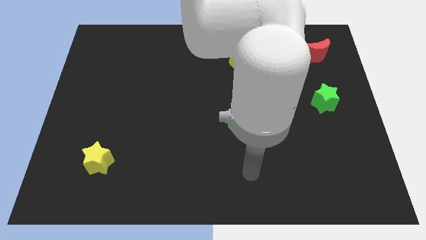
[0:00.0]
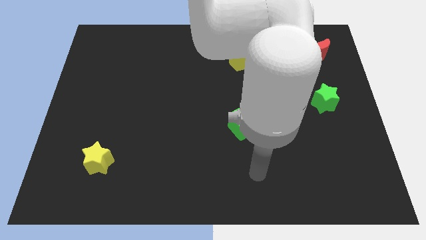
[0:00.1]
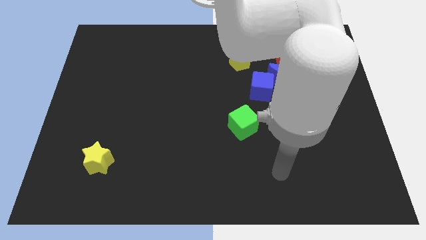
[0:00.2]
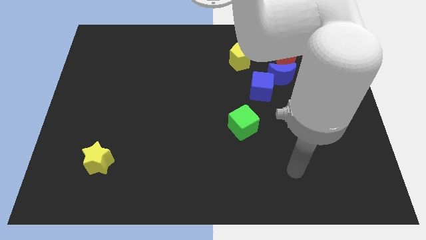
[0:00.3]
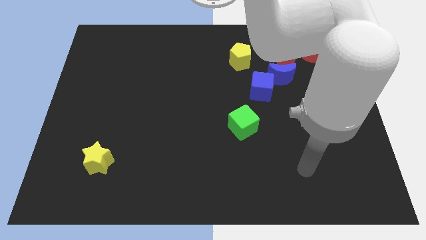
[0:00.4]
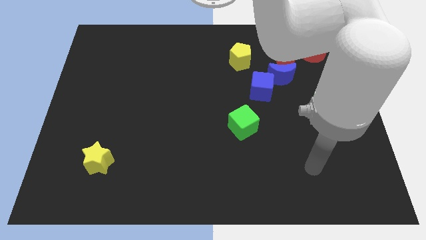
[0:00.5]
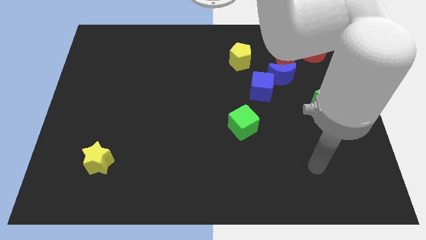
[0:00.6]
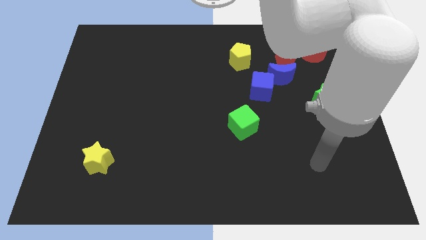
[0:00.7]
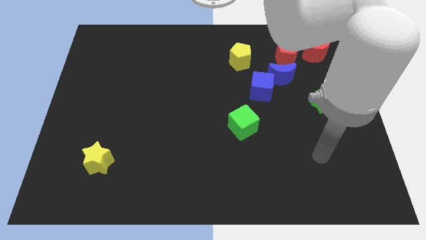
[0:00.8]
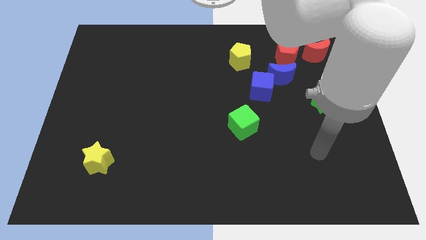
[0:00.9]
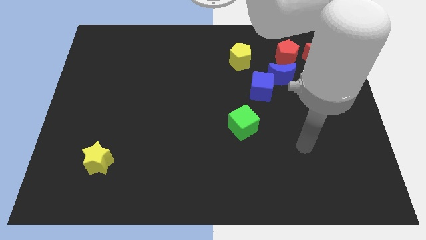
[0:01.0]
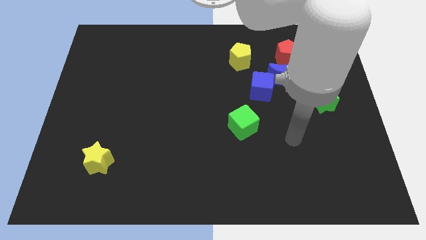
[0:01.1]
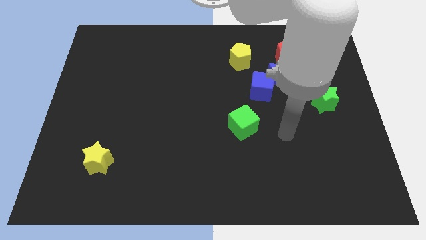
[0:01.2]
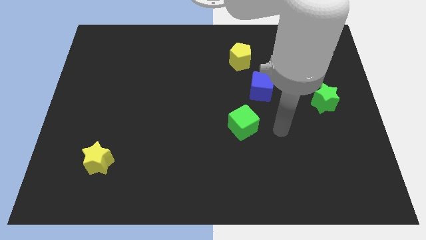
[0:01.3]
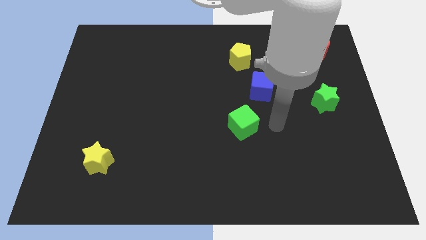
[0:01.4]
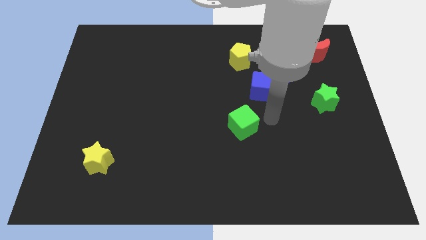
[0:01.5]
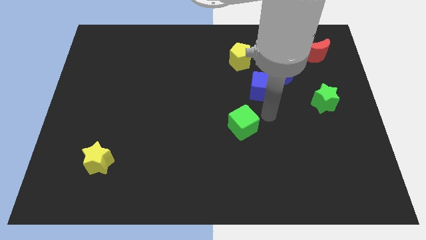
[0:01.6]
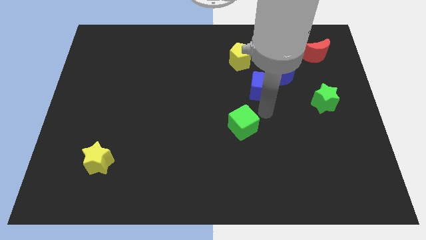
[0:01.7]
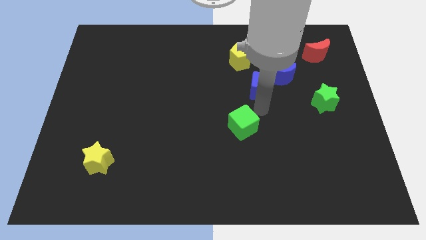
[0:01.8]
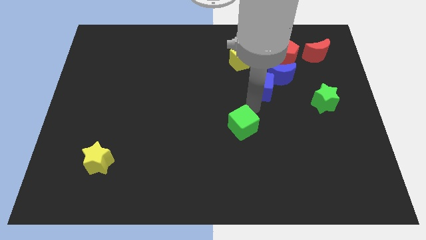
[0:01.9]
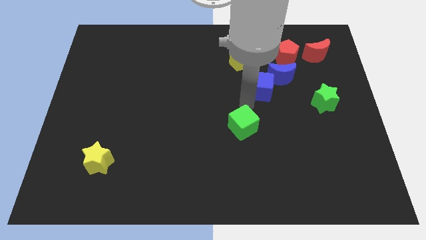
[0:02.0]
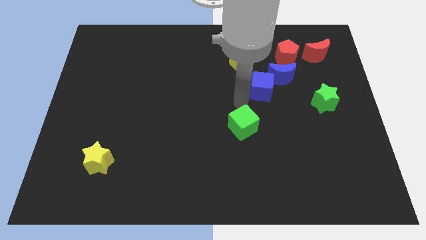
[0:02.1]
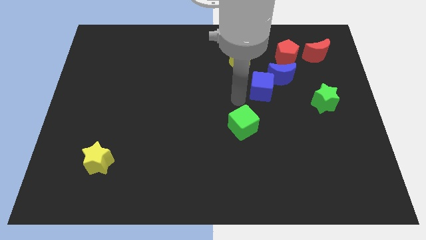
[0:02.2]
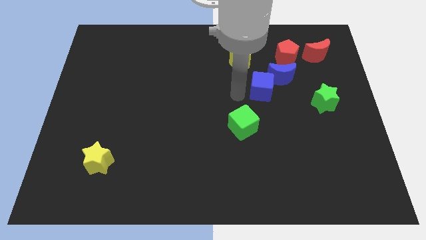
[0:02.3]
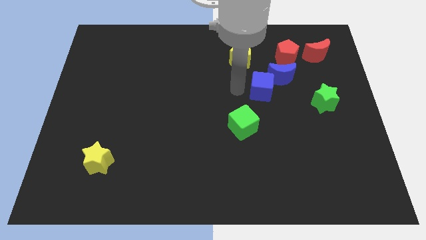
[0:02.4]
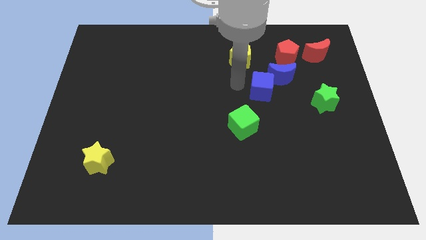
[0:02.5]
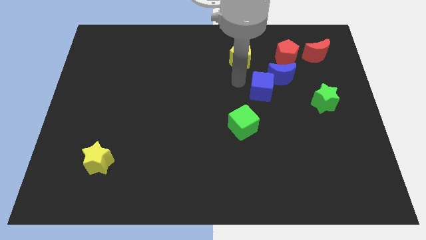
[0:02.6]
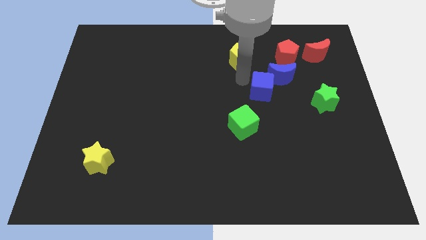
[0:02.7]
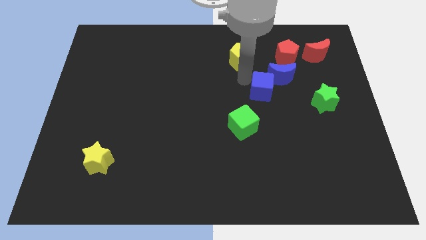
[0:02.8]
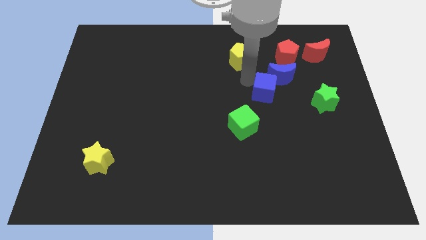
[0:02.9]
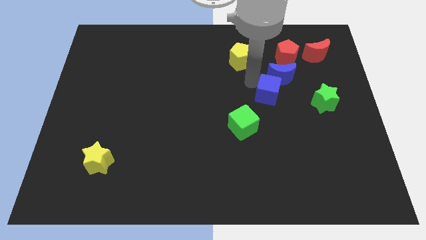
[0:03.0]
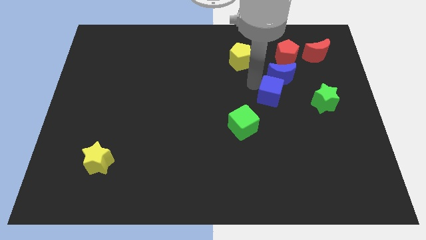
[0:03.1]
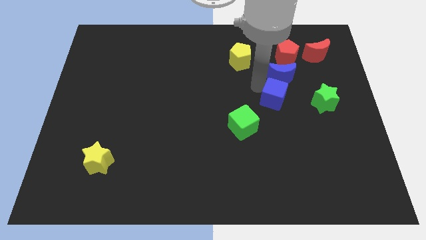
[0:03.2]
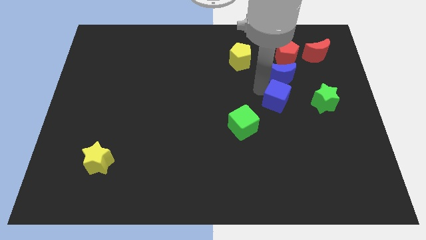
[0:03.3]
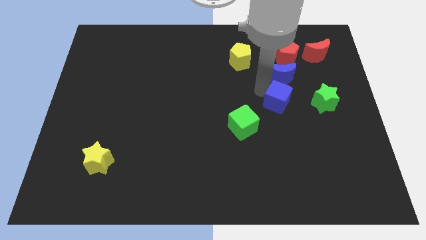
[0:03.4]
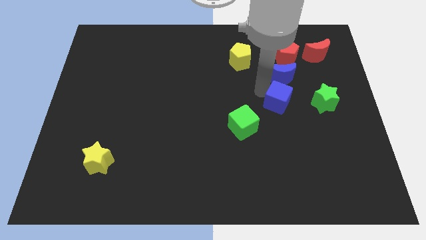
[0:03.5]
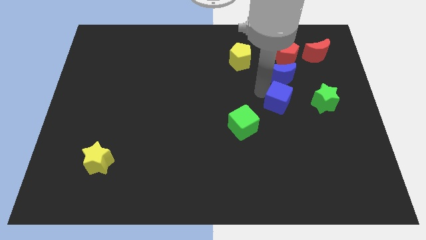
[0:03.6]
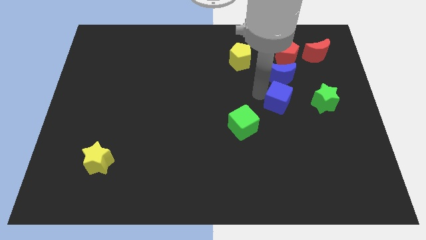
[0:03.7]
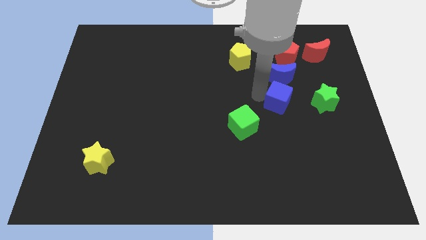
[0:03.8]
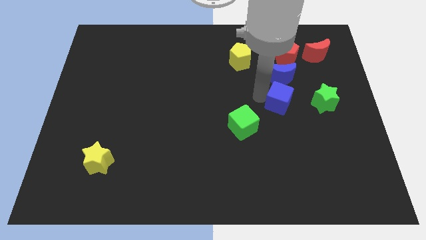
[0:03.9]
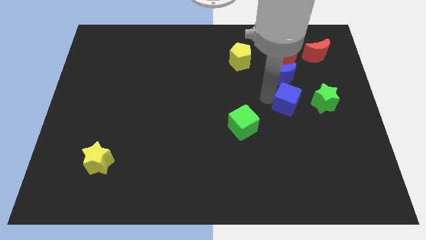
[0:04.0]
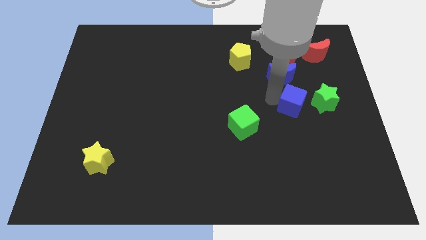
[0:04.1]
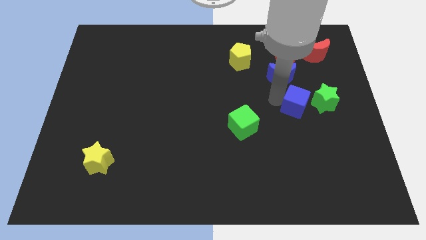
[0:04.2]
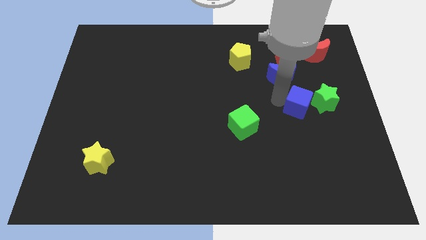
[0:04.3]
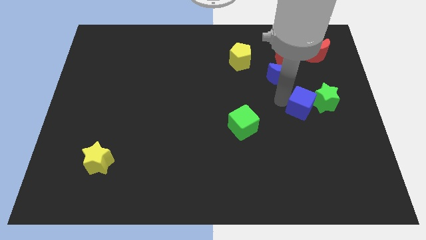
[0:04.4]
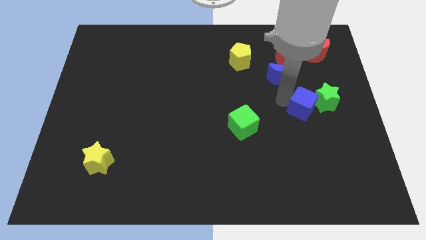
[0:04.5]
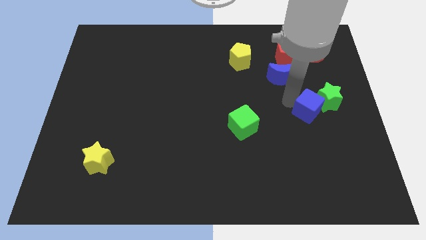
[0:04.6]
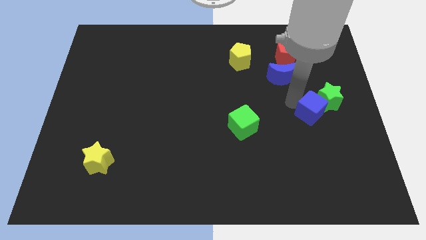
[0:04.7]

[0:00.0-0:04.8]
move the blue cube to the green star

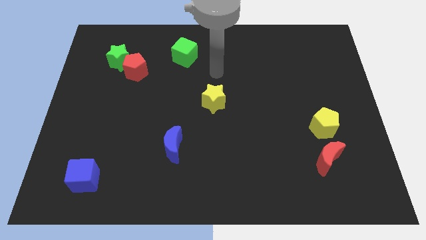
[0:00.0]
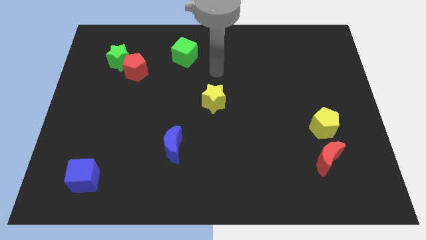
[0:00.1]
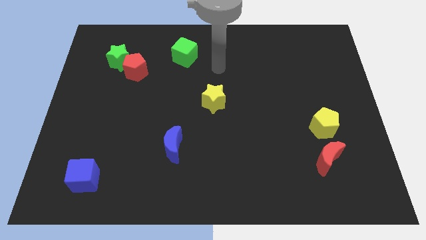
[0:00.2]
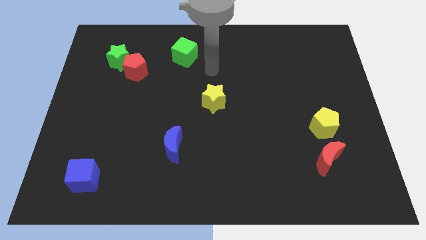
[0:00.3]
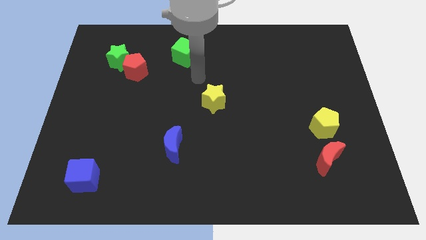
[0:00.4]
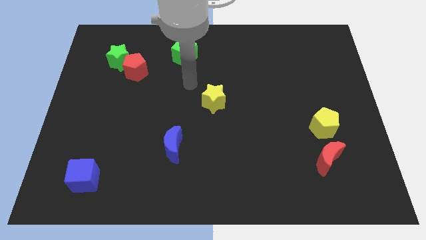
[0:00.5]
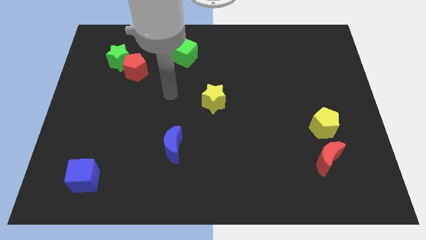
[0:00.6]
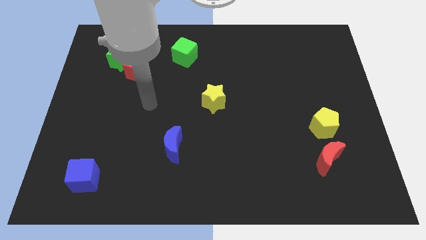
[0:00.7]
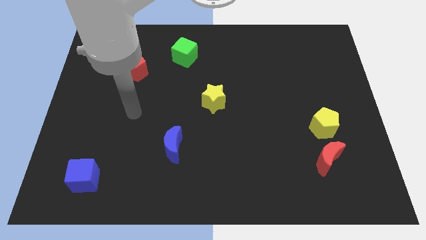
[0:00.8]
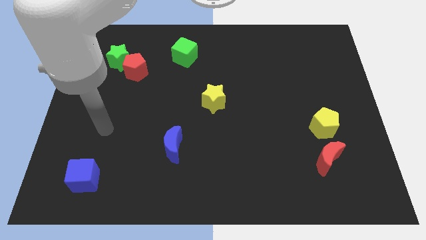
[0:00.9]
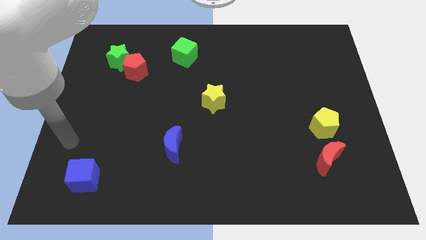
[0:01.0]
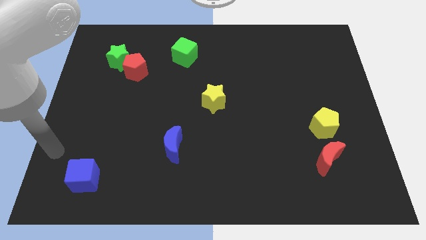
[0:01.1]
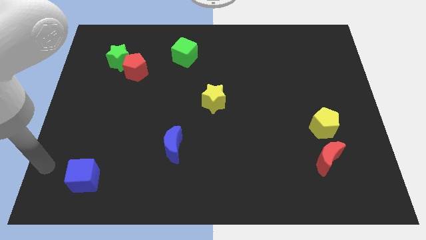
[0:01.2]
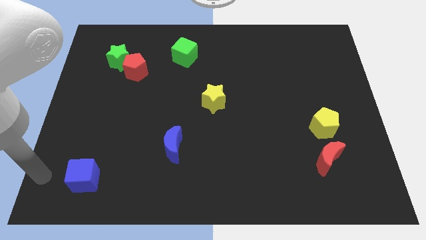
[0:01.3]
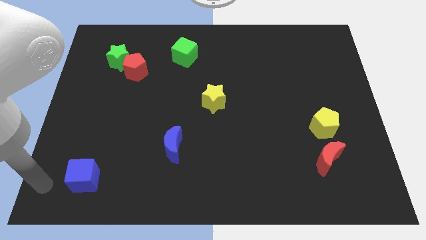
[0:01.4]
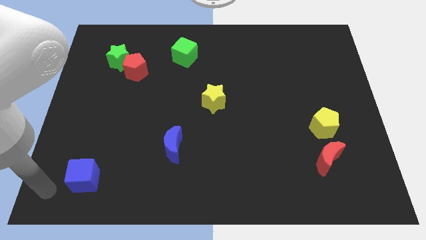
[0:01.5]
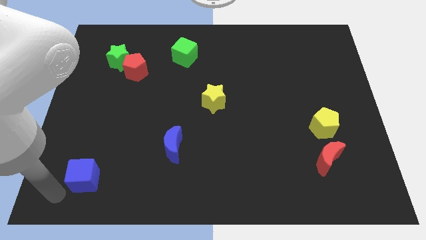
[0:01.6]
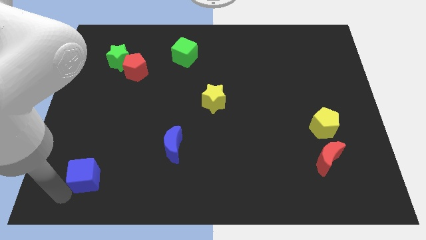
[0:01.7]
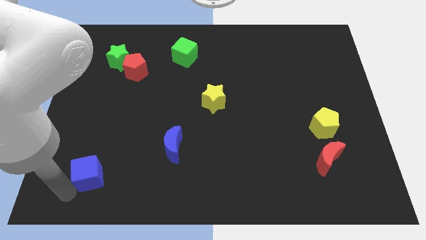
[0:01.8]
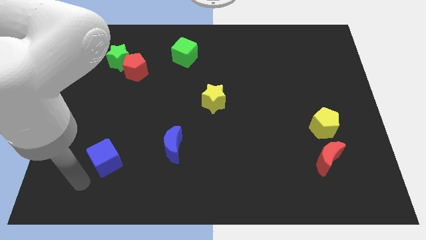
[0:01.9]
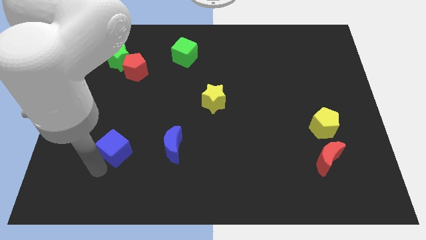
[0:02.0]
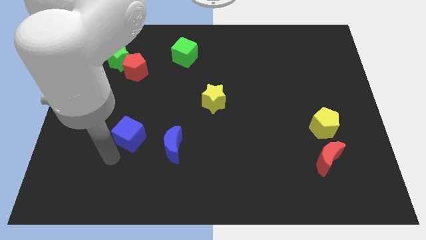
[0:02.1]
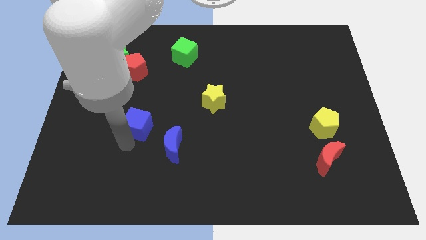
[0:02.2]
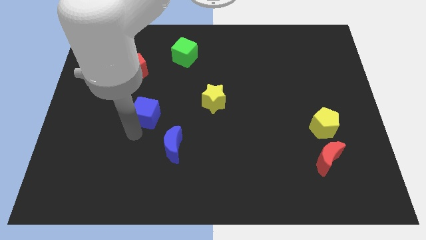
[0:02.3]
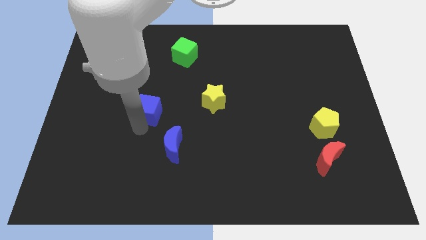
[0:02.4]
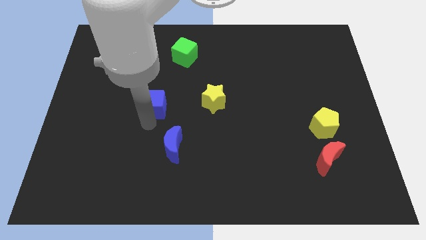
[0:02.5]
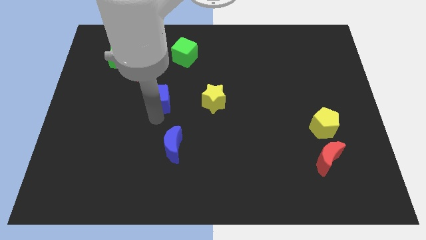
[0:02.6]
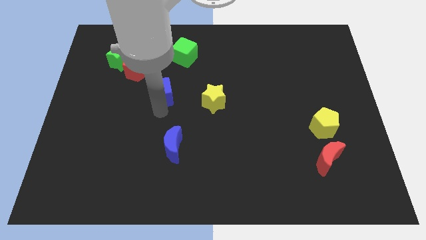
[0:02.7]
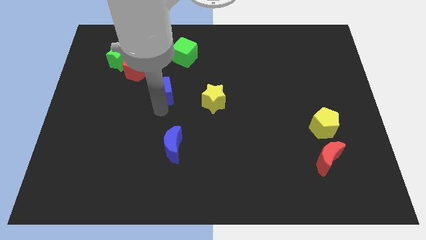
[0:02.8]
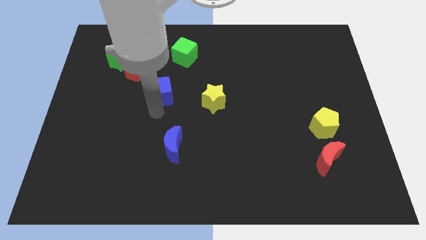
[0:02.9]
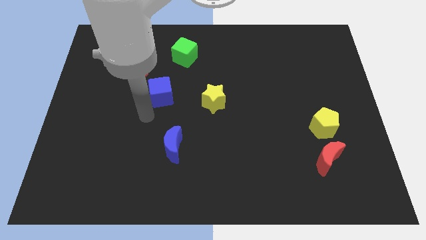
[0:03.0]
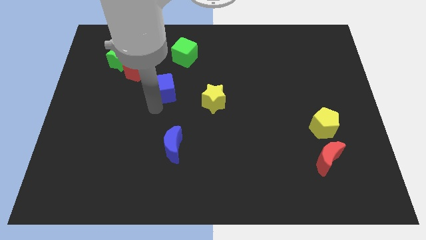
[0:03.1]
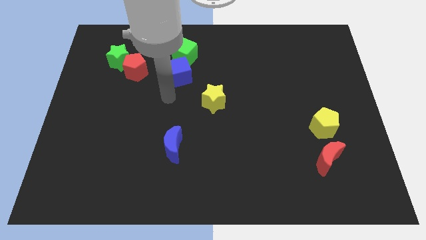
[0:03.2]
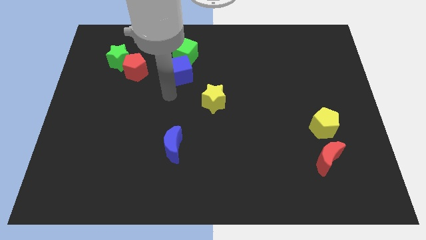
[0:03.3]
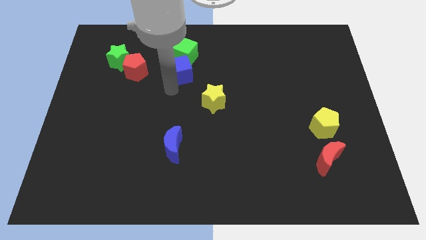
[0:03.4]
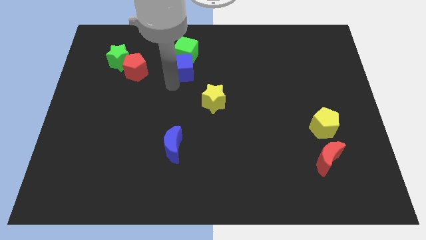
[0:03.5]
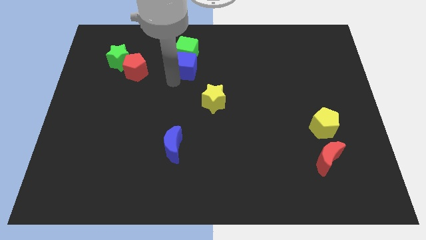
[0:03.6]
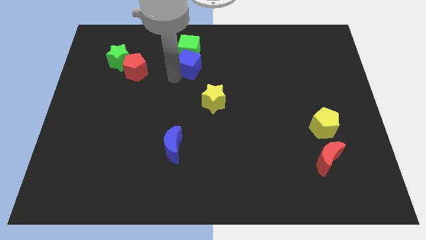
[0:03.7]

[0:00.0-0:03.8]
move the blue cube towards the green cube
